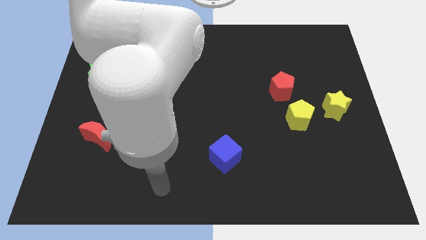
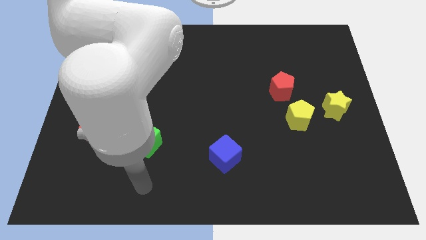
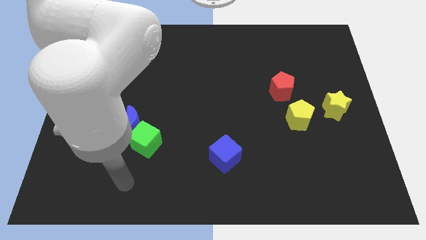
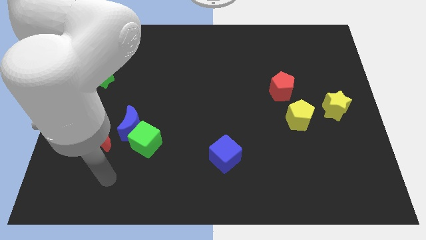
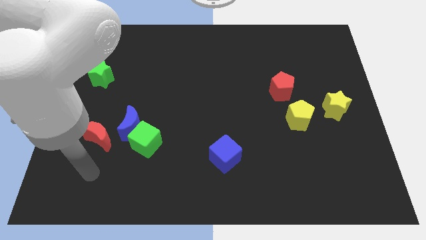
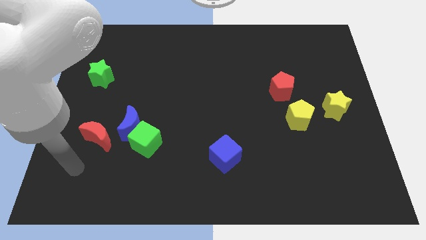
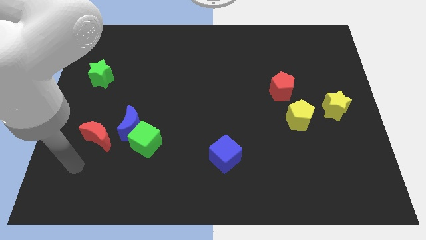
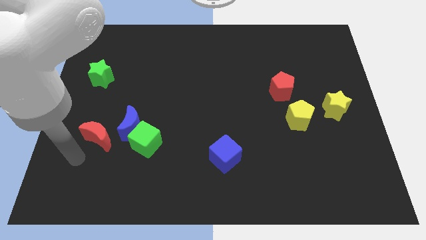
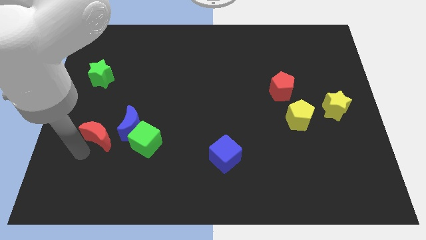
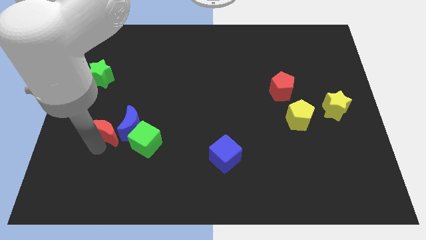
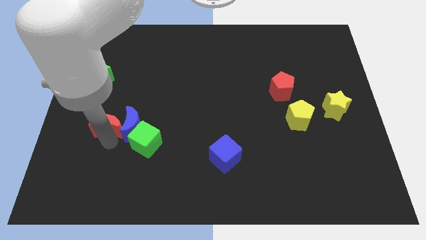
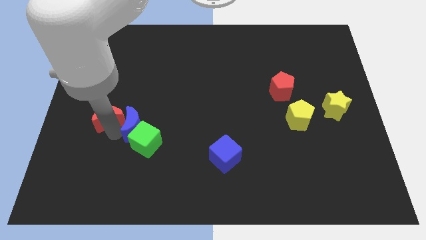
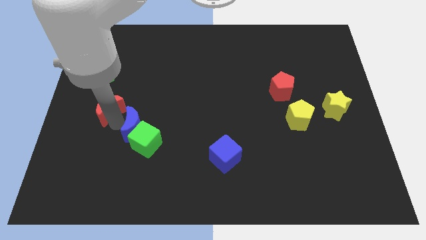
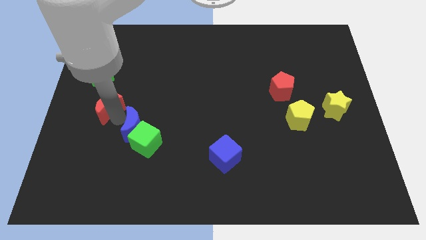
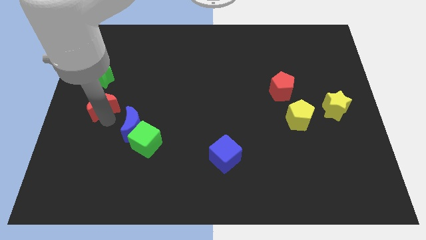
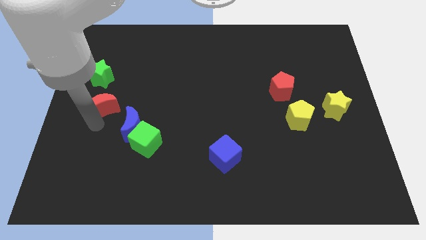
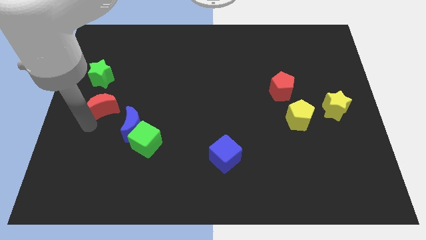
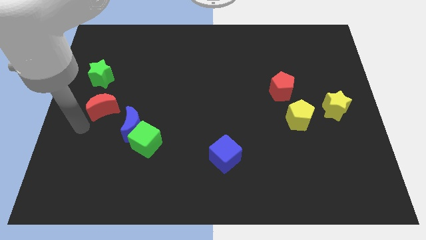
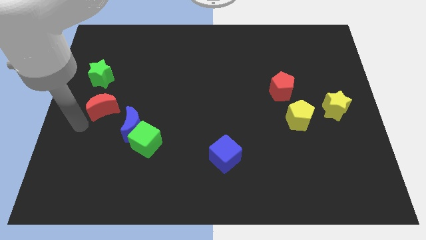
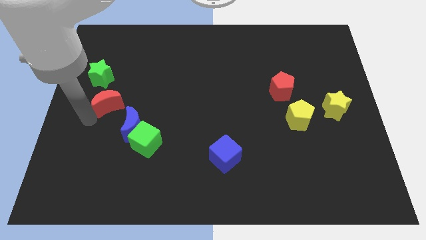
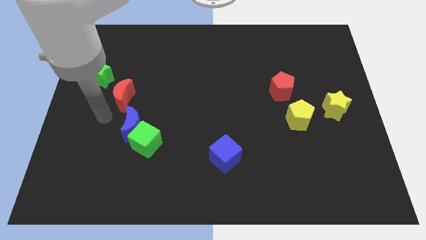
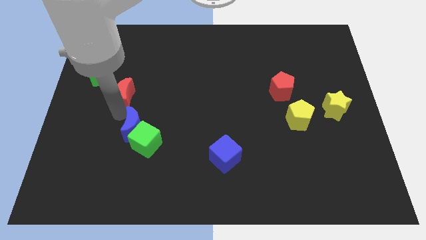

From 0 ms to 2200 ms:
put the red moon above the blue moon

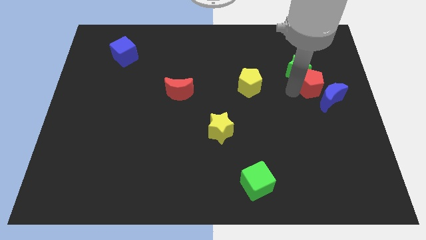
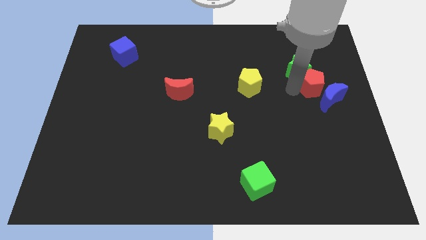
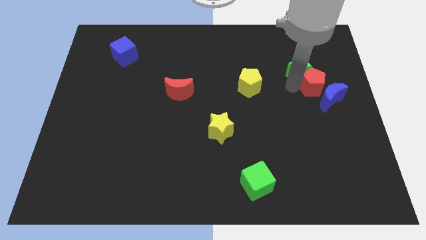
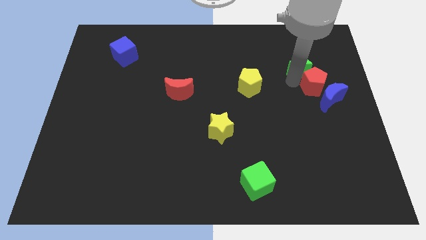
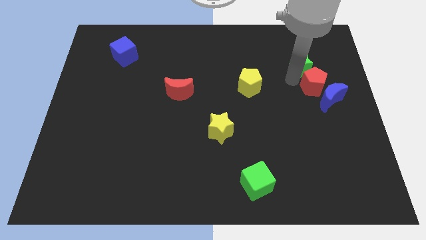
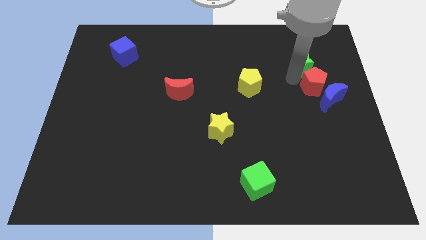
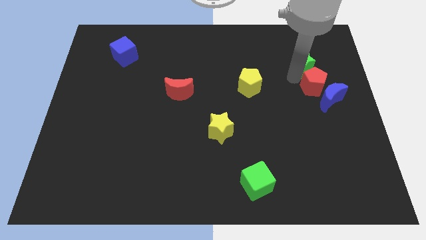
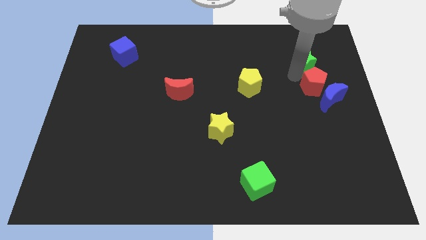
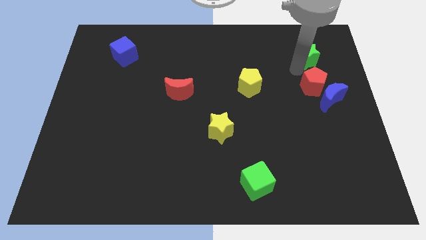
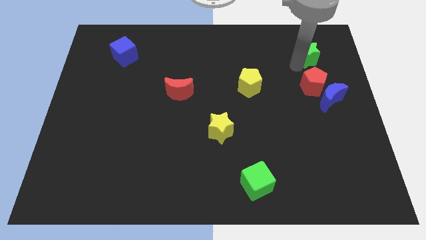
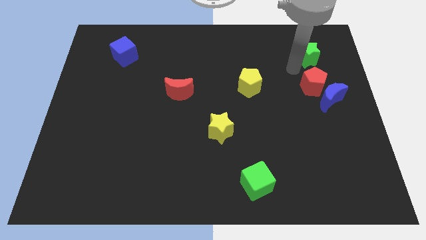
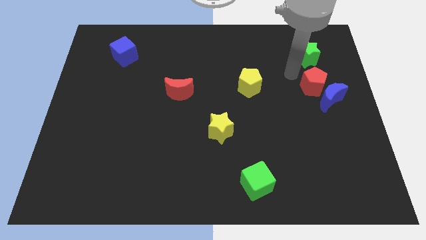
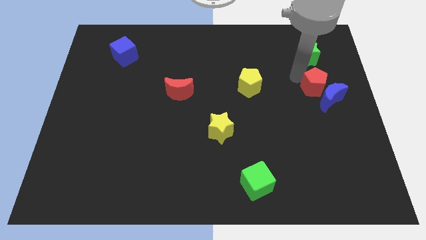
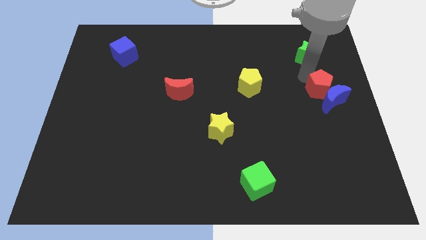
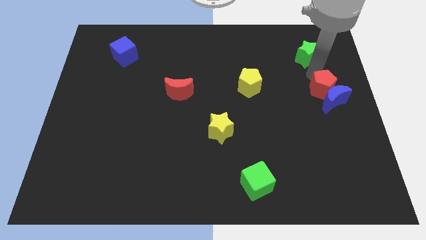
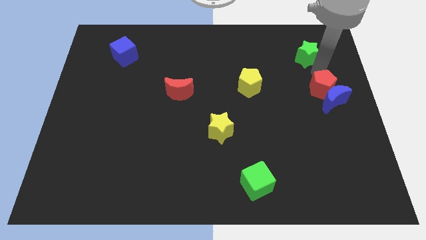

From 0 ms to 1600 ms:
move your hand in between the red pentagon and the green star

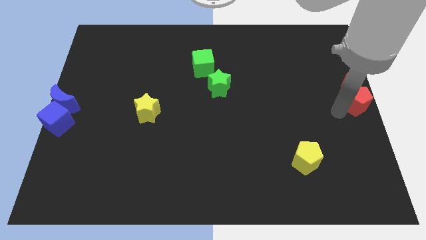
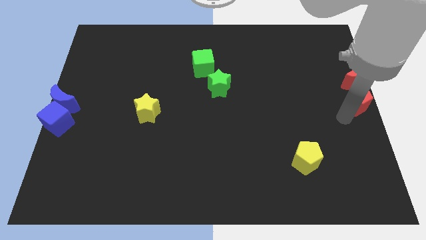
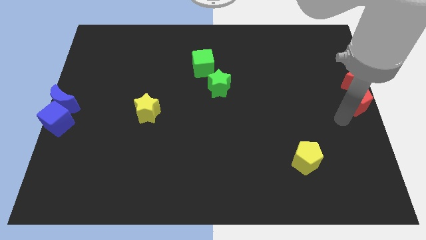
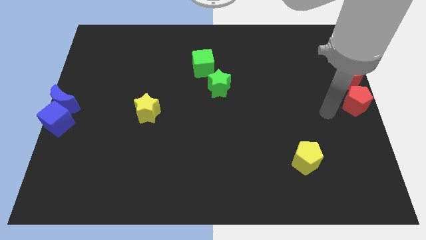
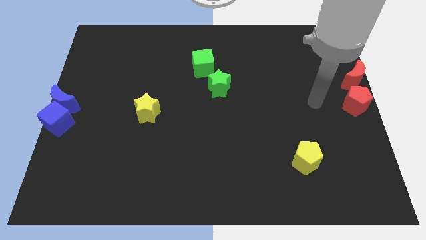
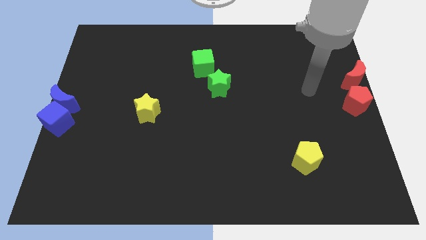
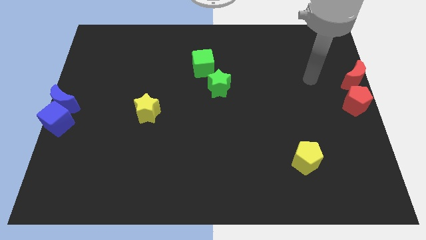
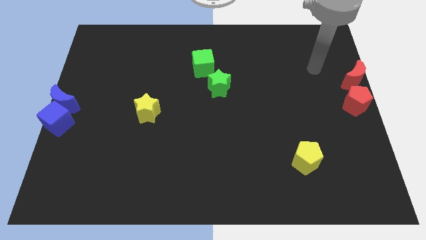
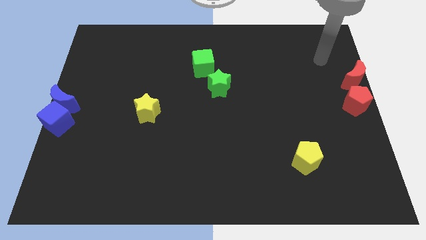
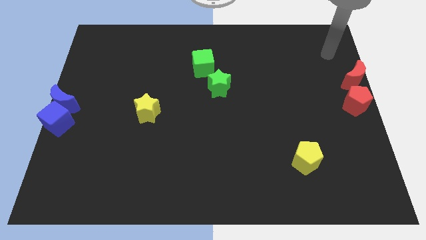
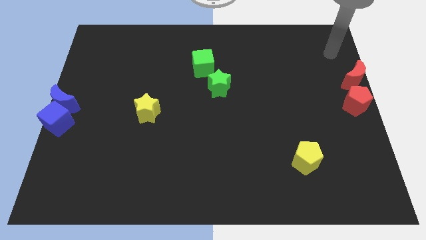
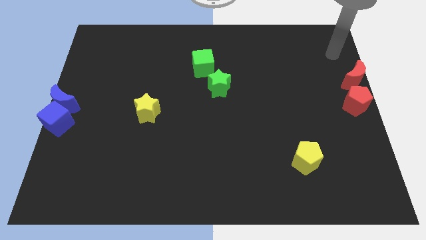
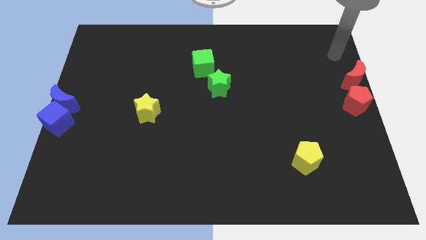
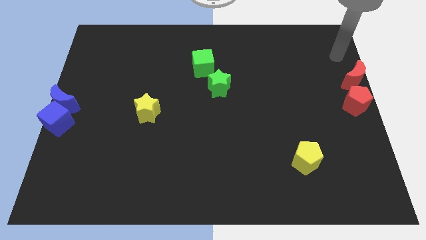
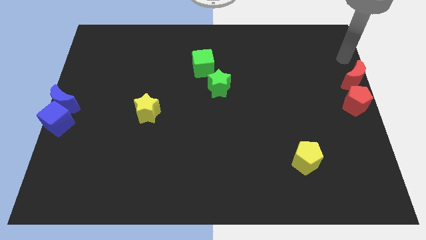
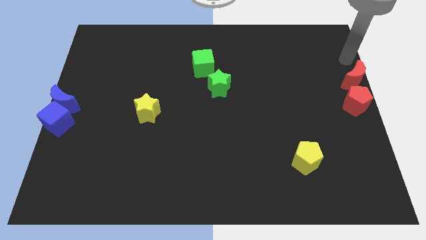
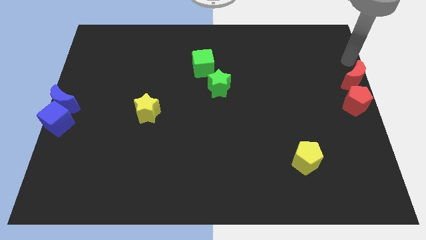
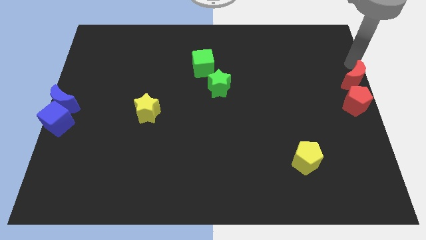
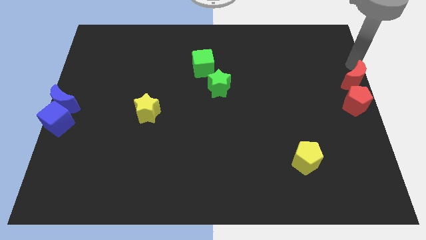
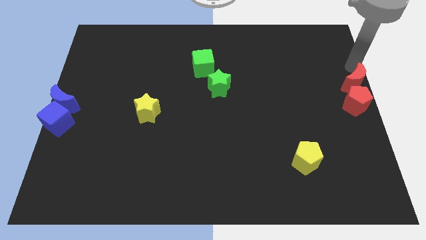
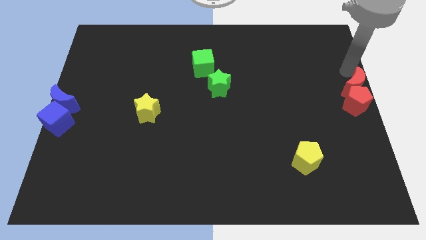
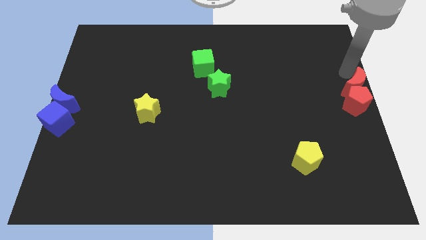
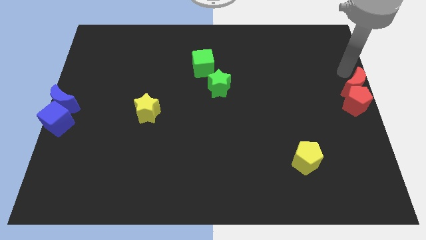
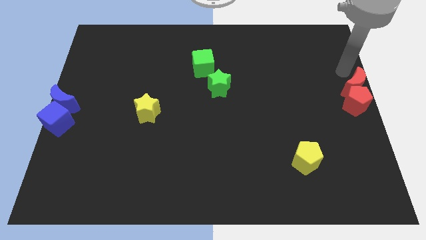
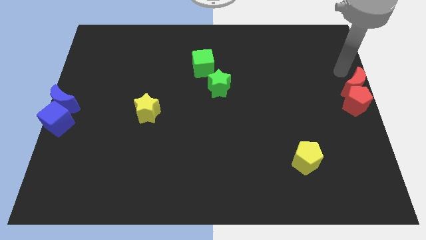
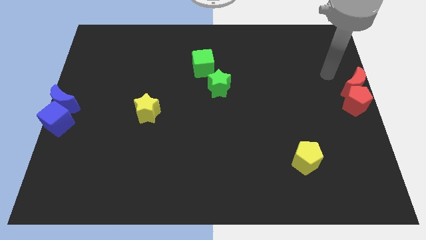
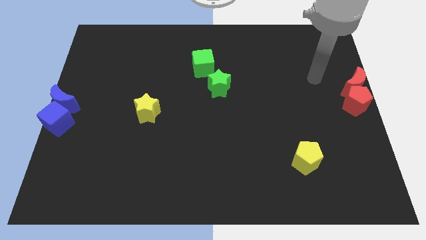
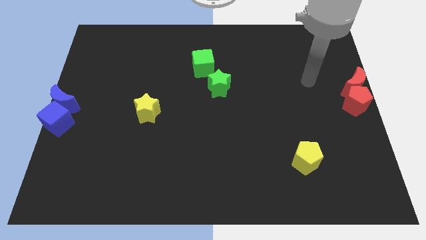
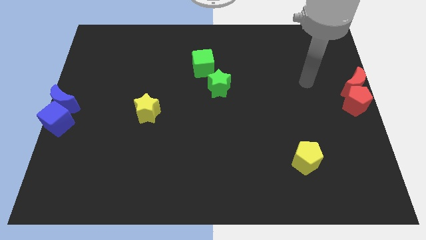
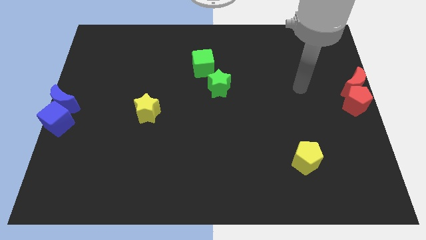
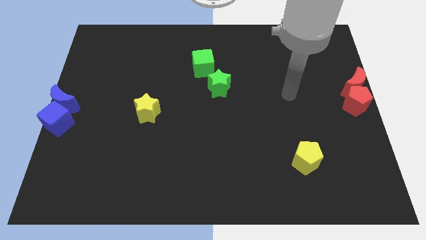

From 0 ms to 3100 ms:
move the red moon into the red pentagon

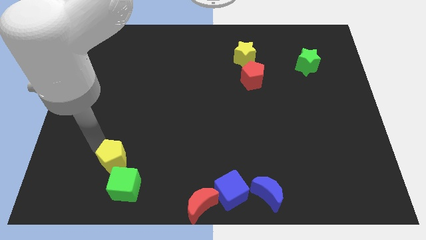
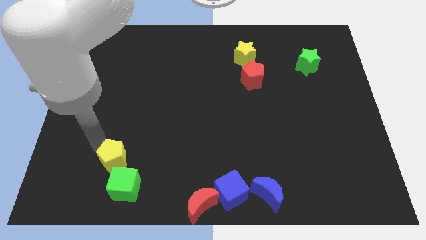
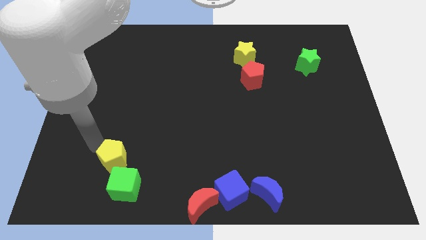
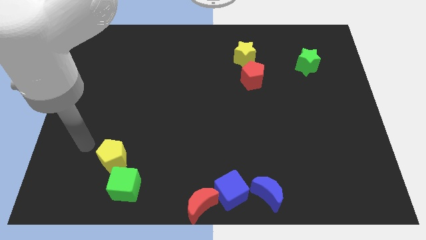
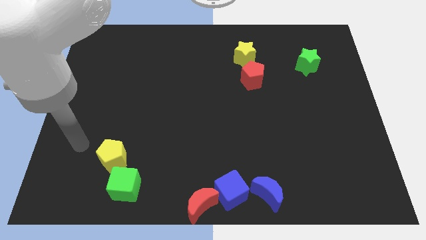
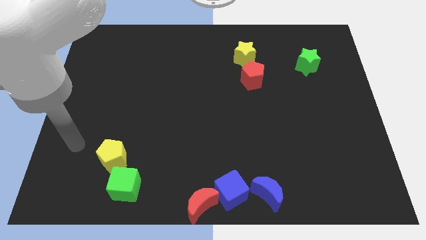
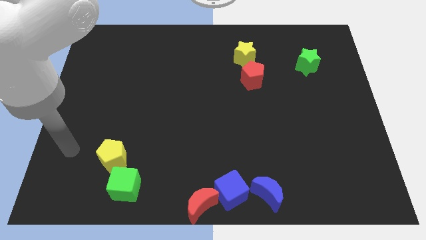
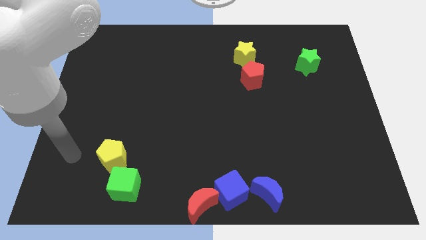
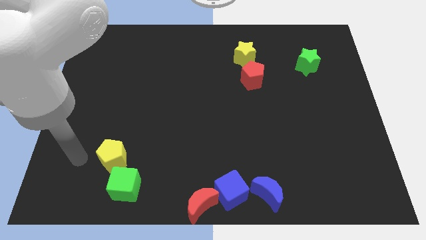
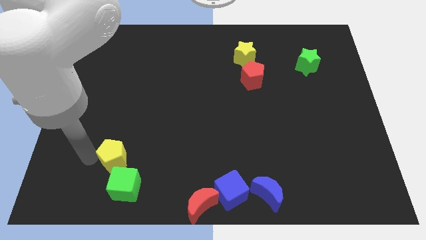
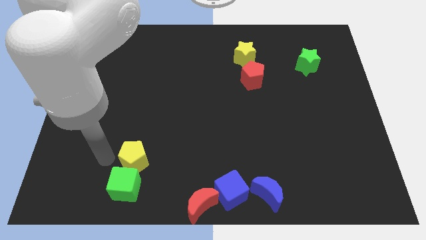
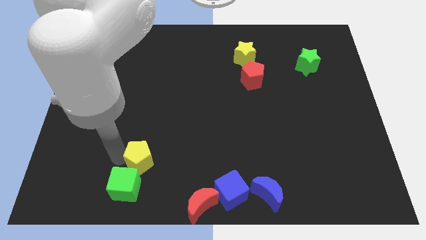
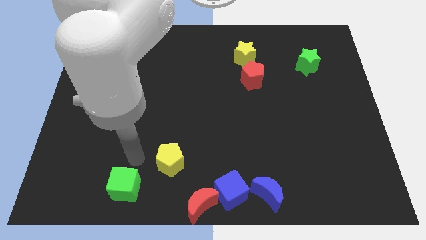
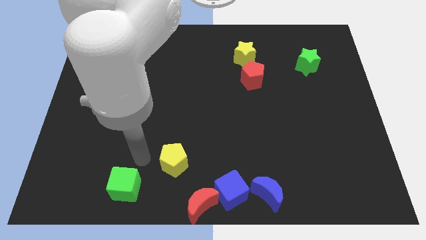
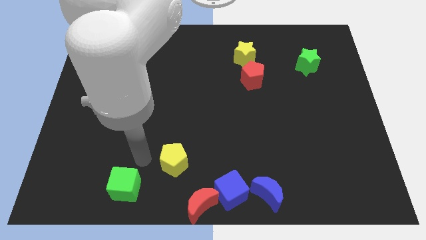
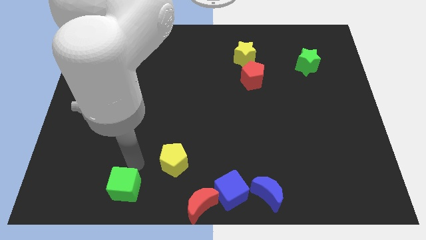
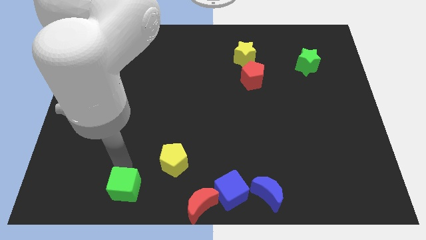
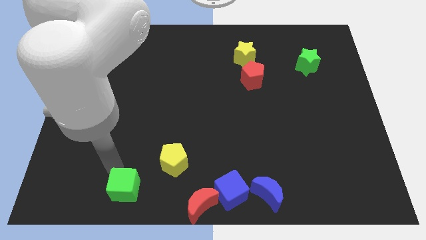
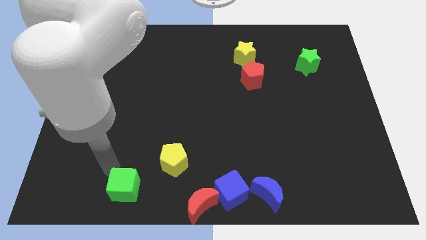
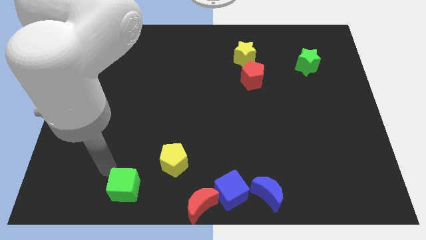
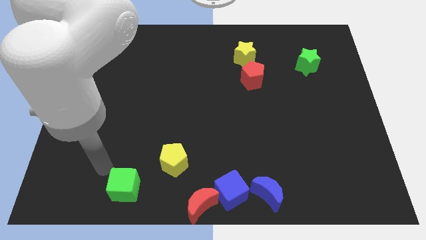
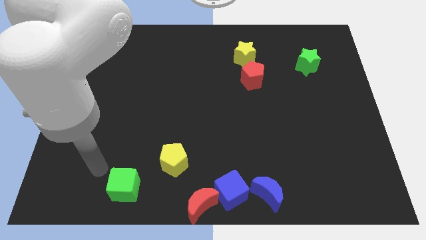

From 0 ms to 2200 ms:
place the yellow pentagon to the top left of the red crescent
